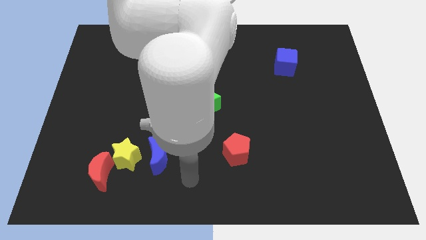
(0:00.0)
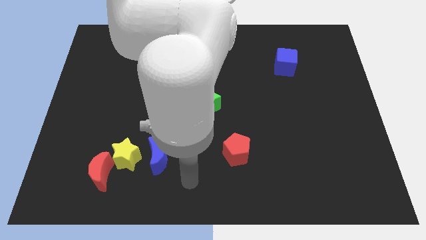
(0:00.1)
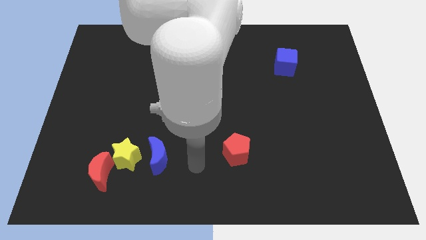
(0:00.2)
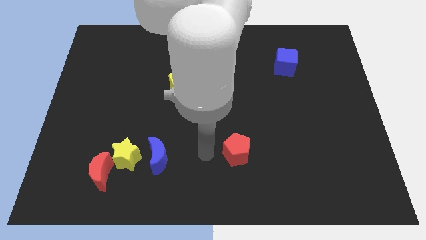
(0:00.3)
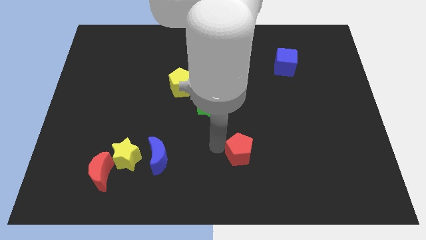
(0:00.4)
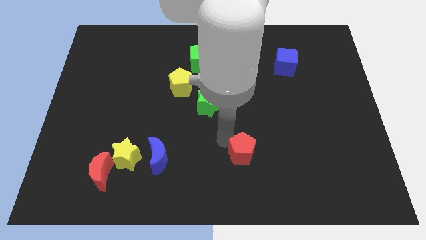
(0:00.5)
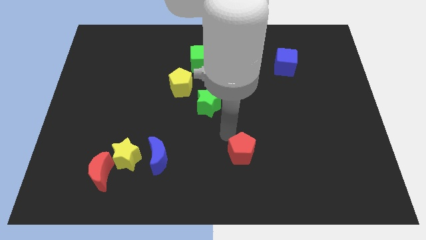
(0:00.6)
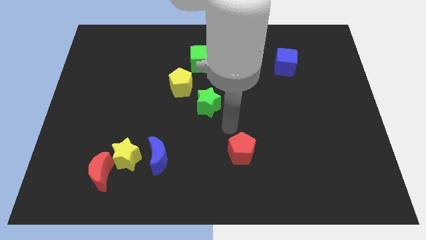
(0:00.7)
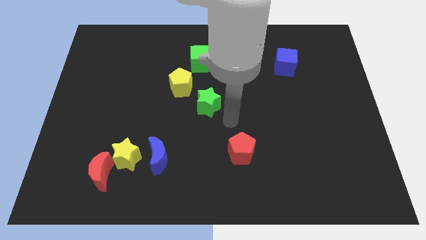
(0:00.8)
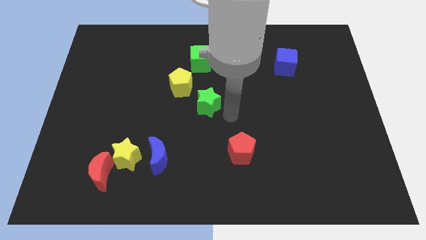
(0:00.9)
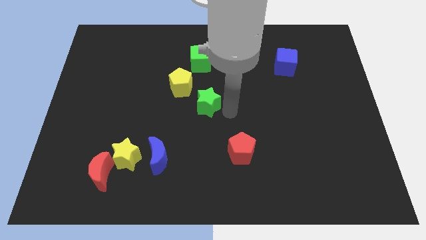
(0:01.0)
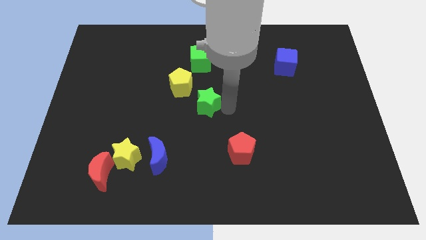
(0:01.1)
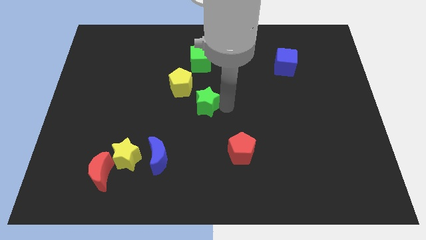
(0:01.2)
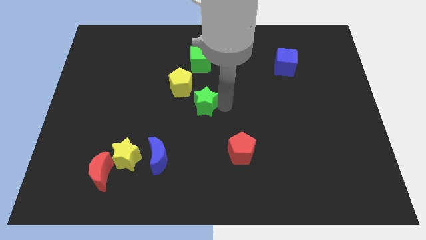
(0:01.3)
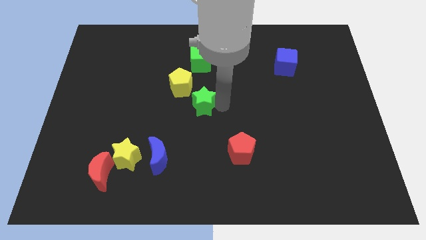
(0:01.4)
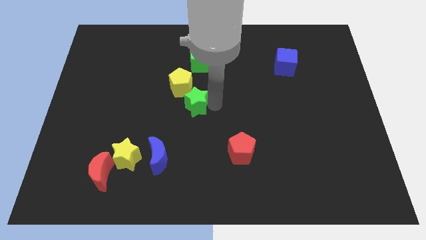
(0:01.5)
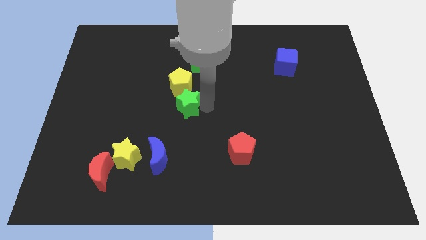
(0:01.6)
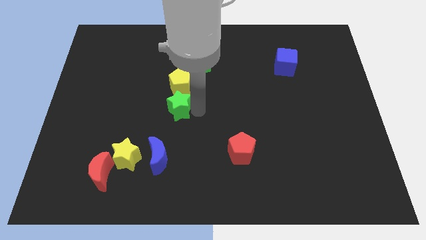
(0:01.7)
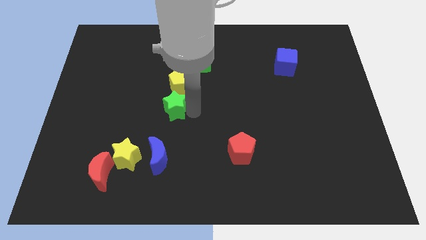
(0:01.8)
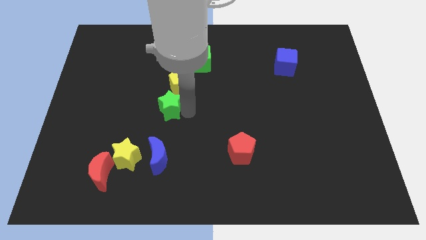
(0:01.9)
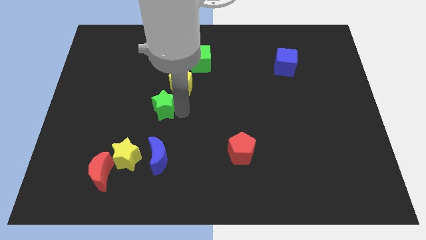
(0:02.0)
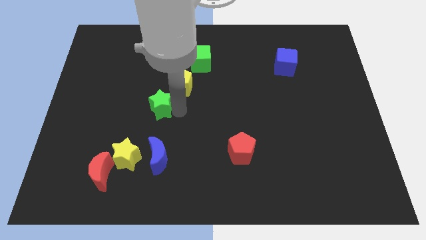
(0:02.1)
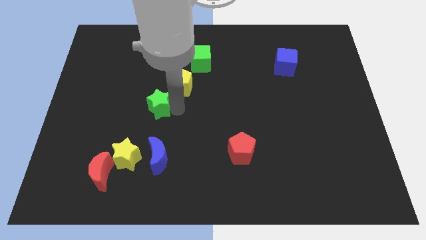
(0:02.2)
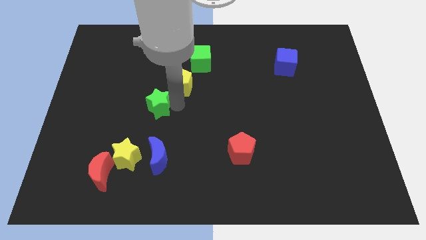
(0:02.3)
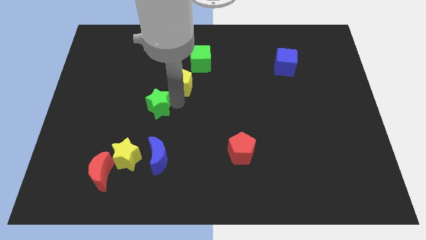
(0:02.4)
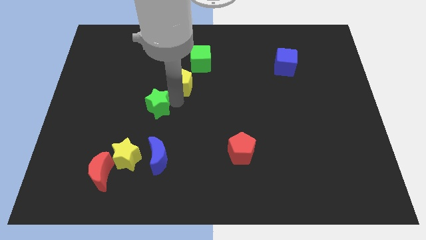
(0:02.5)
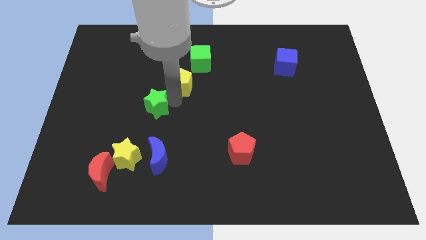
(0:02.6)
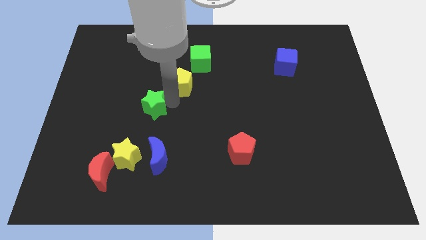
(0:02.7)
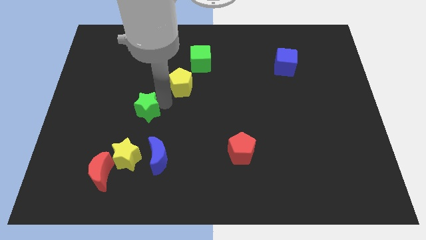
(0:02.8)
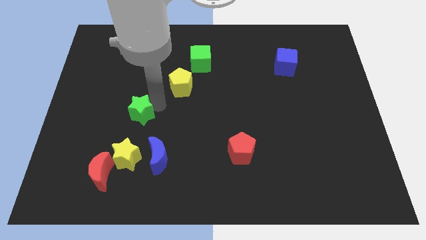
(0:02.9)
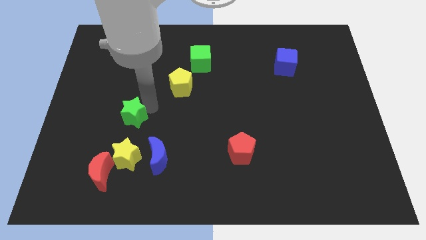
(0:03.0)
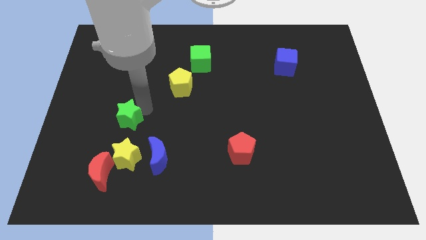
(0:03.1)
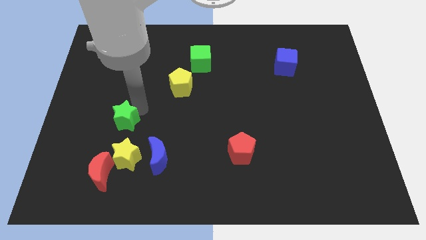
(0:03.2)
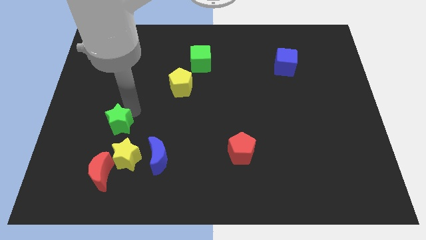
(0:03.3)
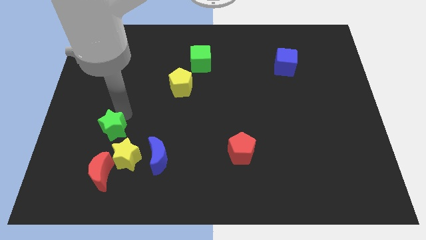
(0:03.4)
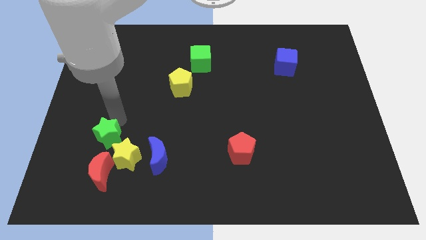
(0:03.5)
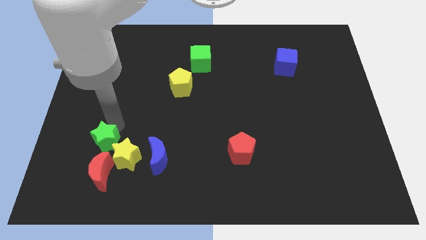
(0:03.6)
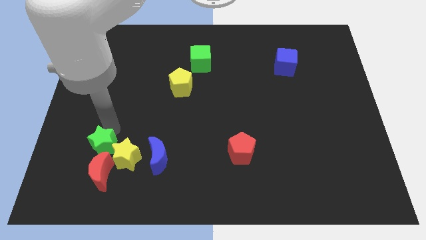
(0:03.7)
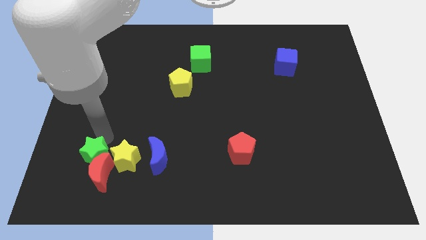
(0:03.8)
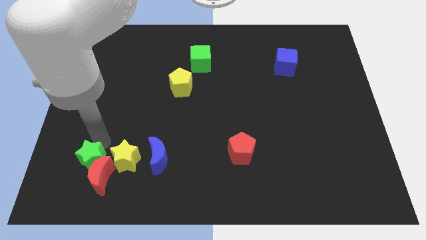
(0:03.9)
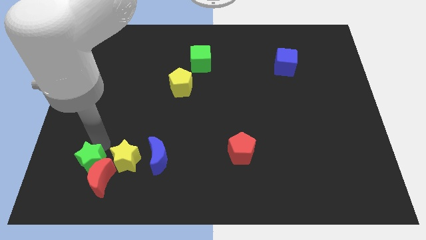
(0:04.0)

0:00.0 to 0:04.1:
slide the green star close to the red moon

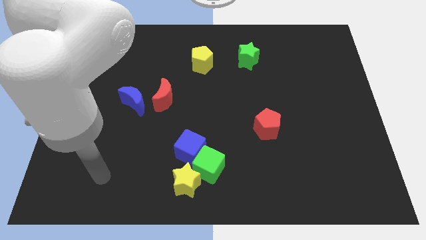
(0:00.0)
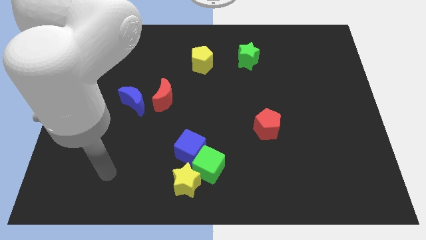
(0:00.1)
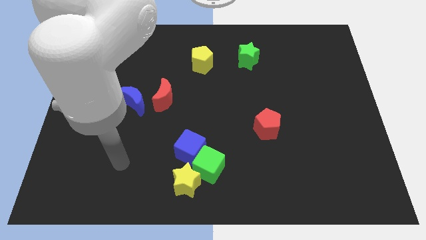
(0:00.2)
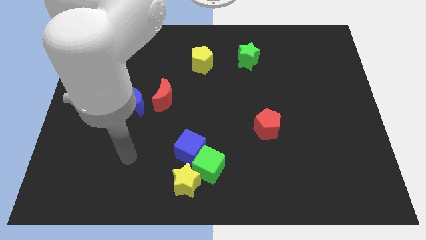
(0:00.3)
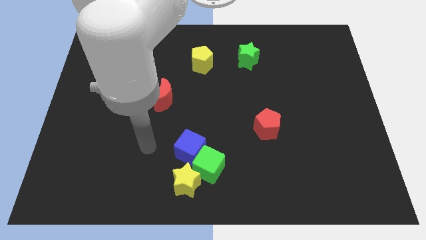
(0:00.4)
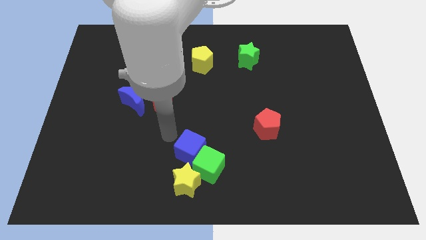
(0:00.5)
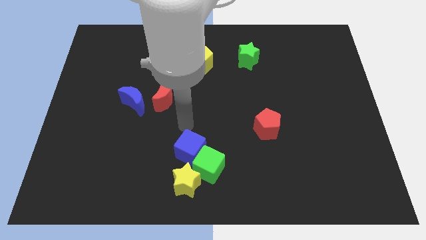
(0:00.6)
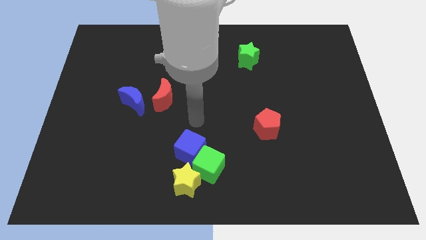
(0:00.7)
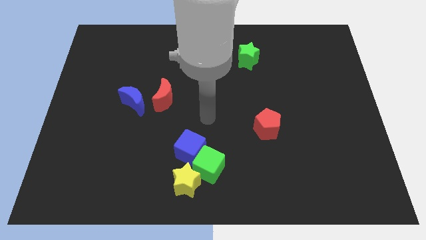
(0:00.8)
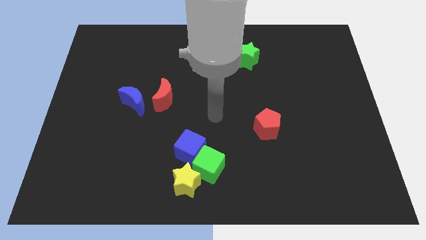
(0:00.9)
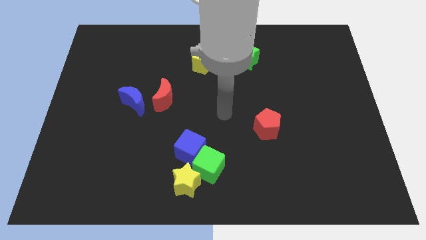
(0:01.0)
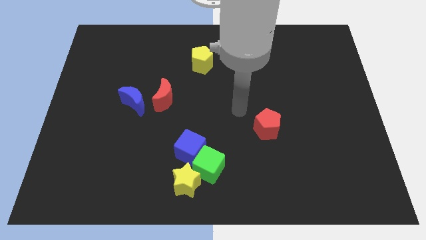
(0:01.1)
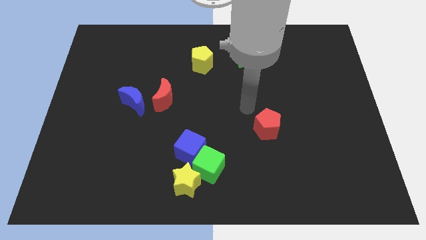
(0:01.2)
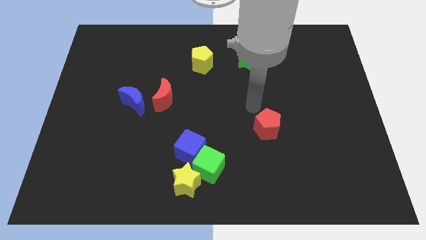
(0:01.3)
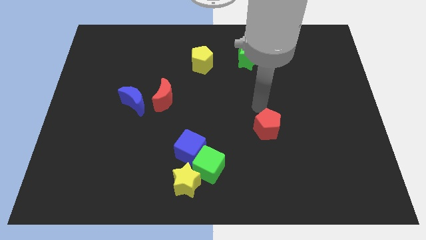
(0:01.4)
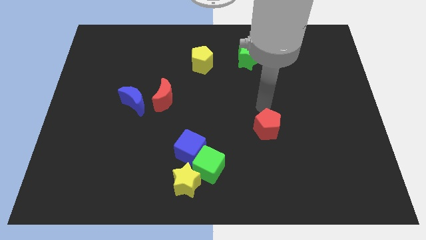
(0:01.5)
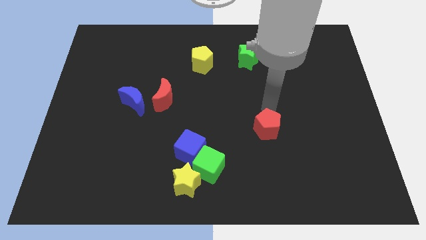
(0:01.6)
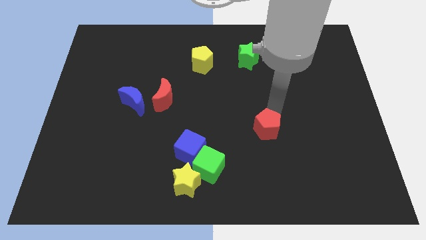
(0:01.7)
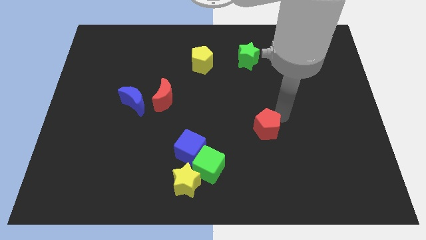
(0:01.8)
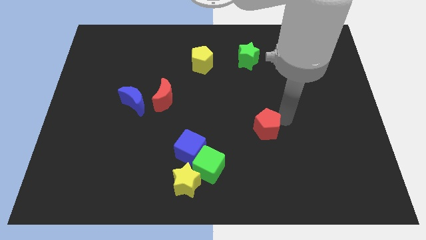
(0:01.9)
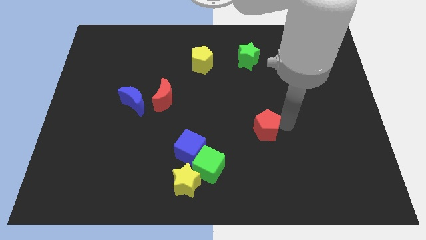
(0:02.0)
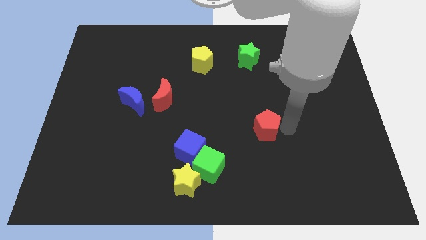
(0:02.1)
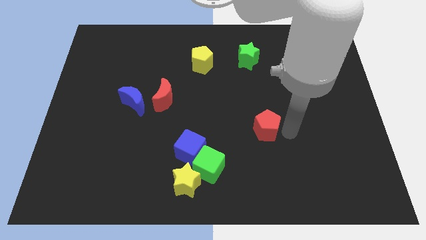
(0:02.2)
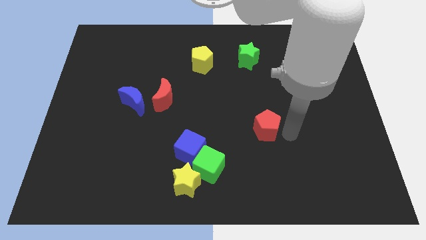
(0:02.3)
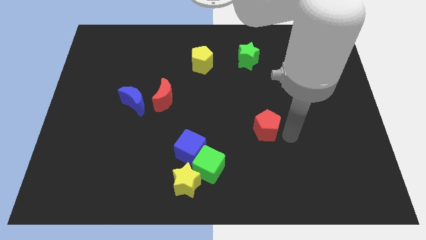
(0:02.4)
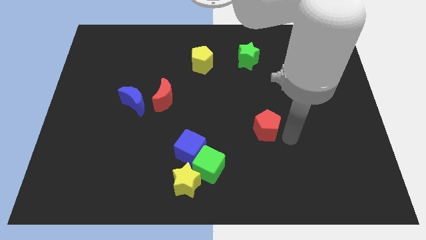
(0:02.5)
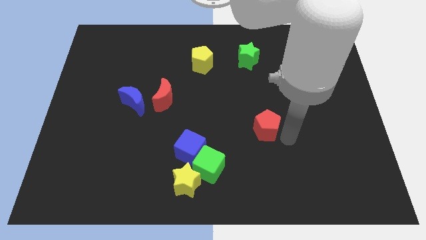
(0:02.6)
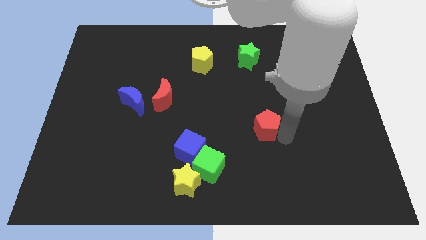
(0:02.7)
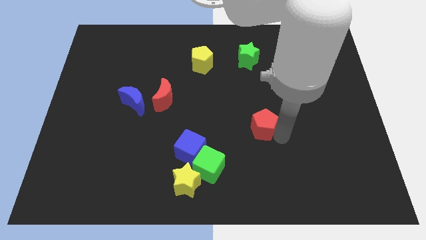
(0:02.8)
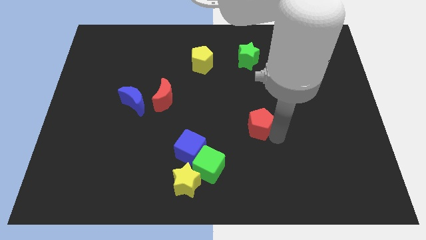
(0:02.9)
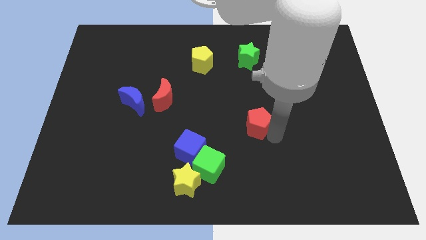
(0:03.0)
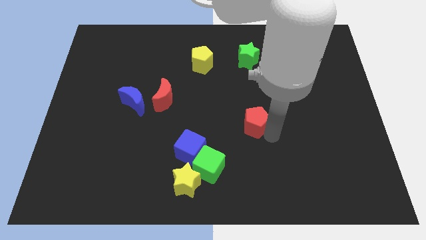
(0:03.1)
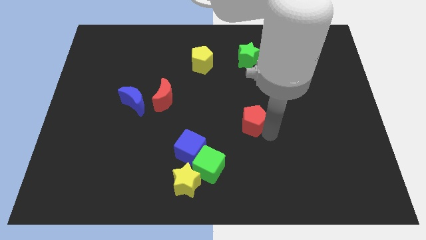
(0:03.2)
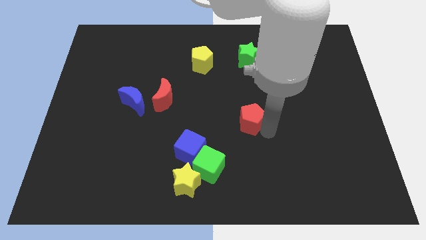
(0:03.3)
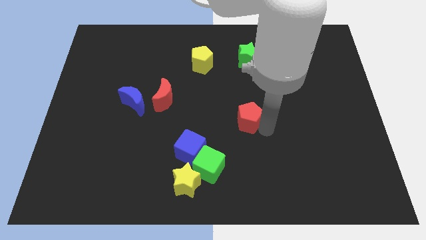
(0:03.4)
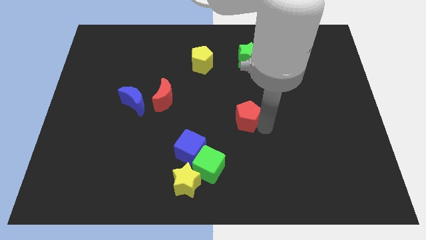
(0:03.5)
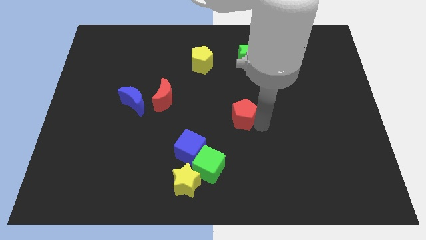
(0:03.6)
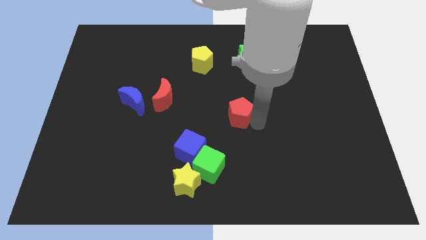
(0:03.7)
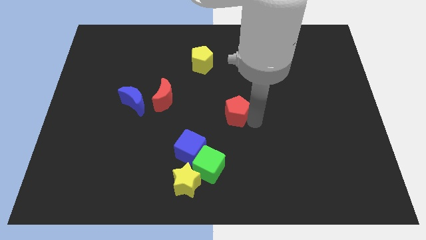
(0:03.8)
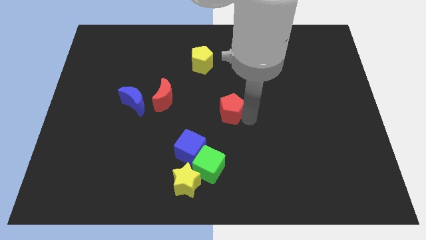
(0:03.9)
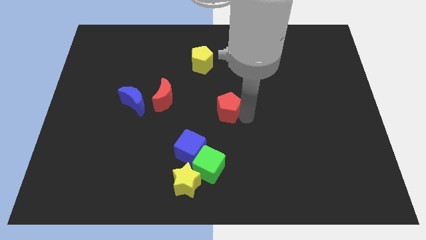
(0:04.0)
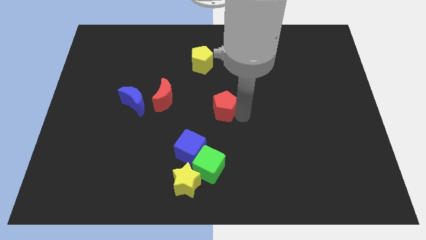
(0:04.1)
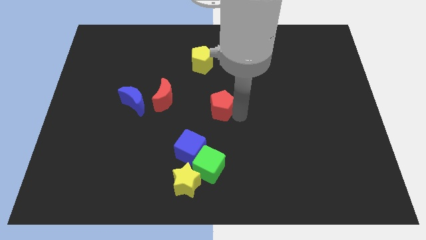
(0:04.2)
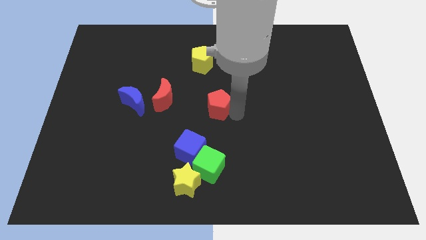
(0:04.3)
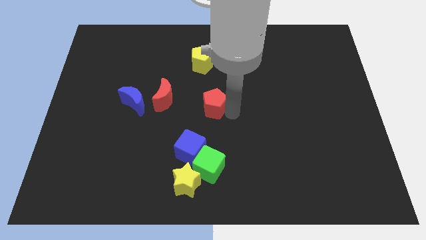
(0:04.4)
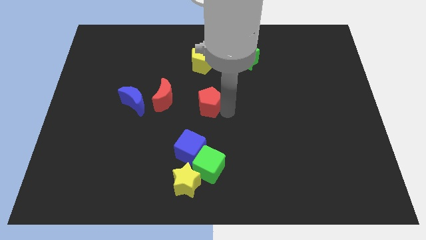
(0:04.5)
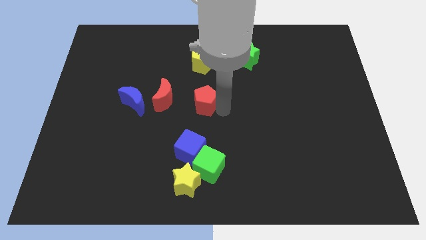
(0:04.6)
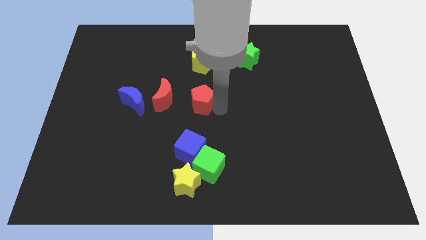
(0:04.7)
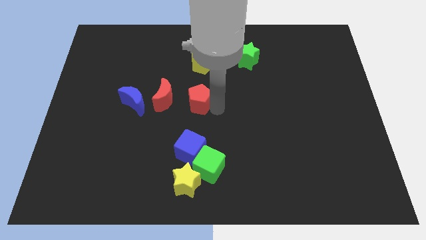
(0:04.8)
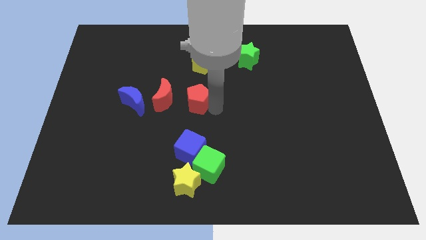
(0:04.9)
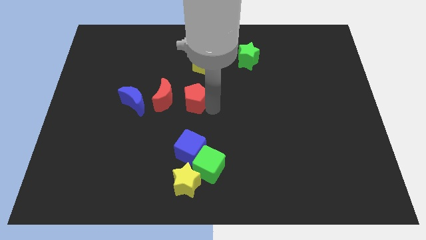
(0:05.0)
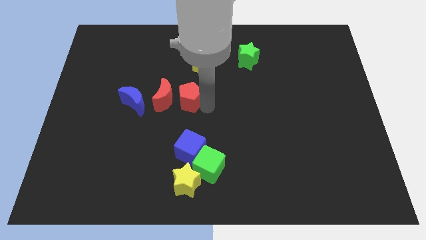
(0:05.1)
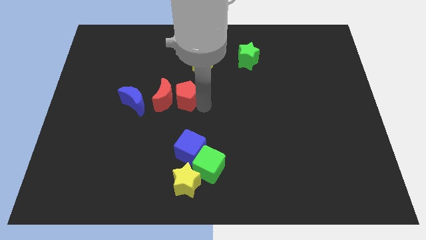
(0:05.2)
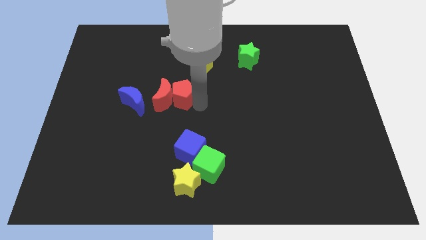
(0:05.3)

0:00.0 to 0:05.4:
slide the red pentagon close to the red moon
